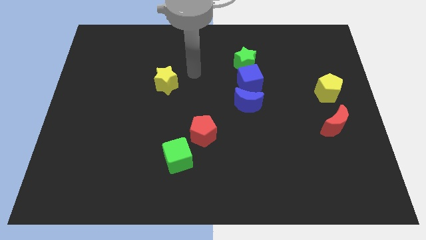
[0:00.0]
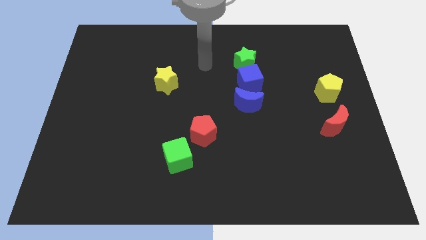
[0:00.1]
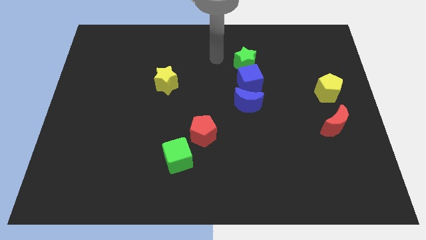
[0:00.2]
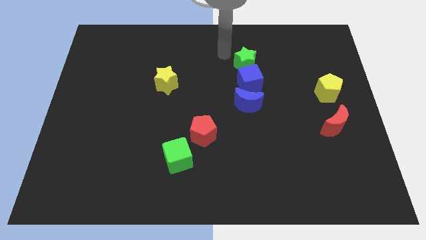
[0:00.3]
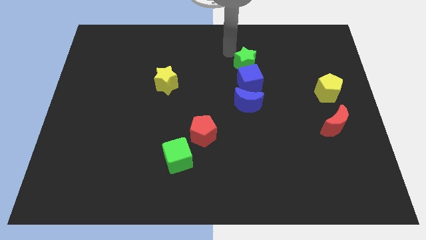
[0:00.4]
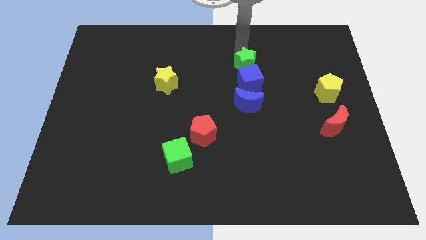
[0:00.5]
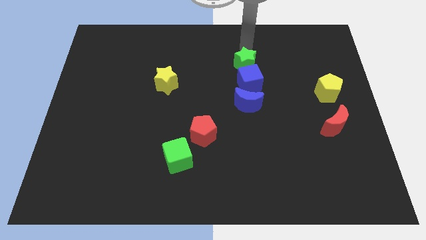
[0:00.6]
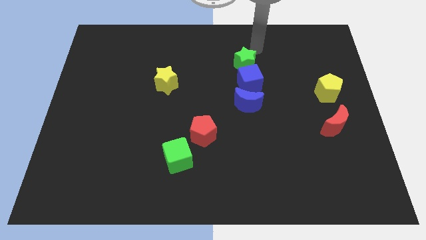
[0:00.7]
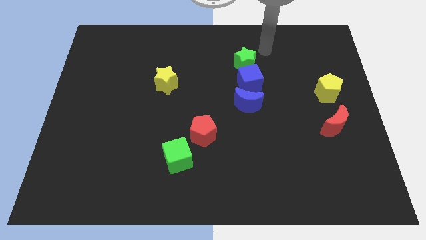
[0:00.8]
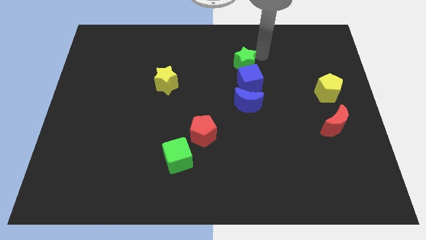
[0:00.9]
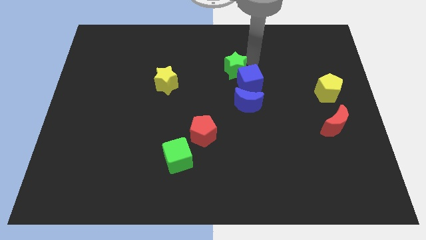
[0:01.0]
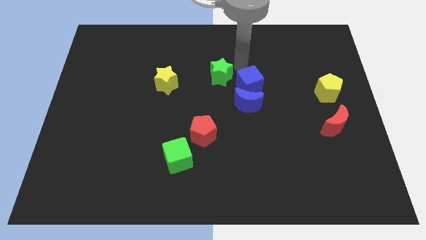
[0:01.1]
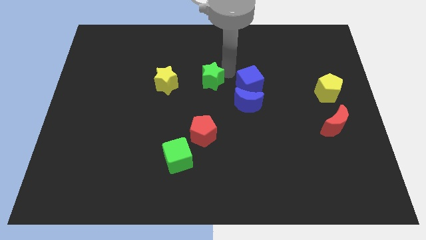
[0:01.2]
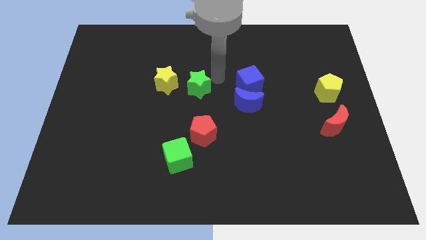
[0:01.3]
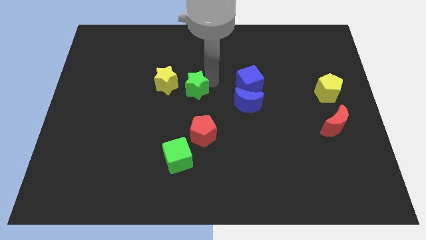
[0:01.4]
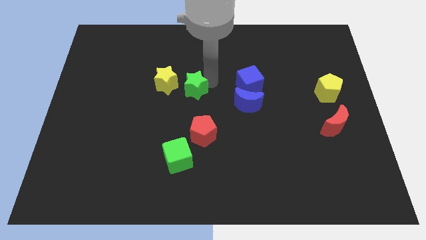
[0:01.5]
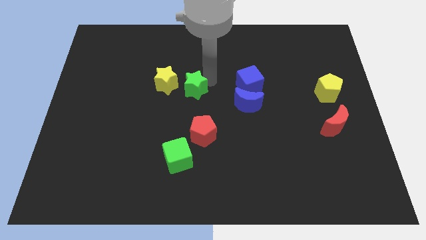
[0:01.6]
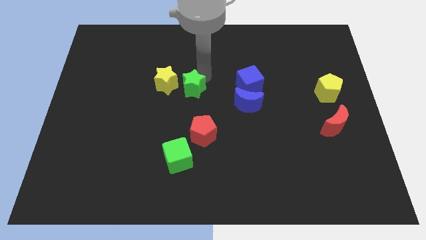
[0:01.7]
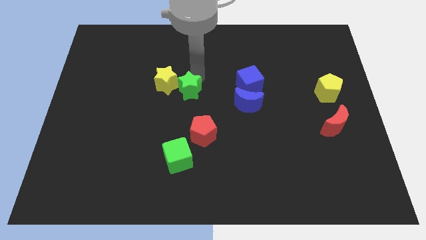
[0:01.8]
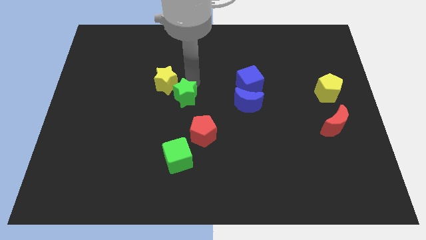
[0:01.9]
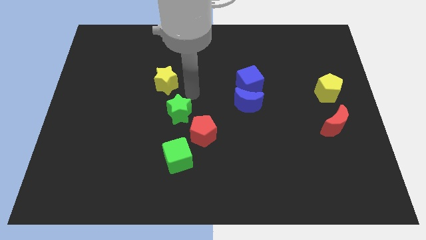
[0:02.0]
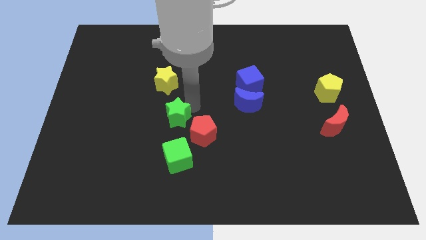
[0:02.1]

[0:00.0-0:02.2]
place the green star above the green cube

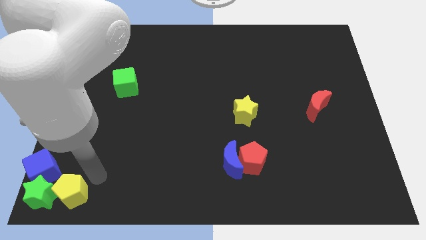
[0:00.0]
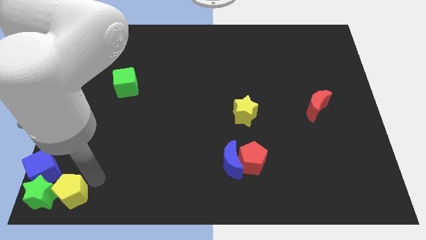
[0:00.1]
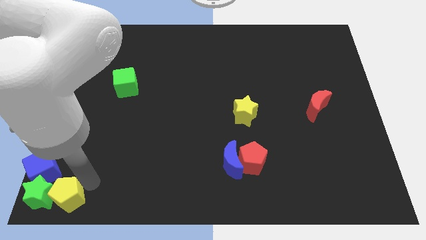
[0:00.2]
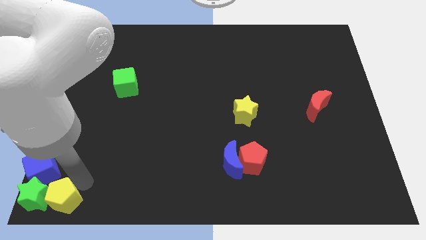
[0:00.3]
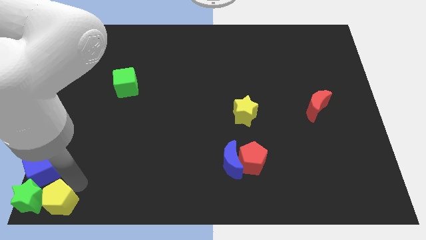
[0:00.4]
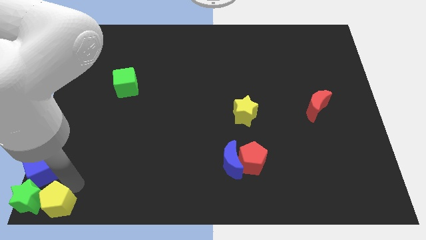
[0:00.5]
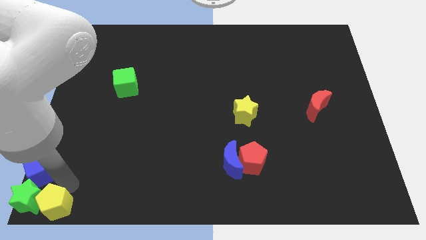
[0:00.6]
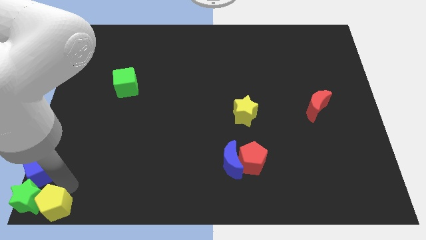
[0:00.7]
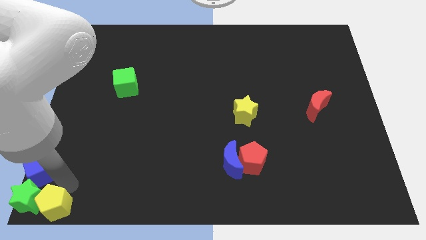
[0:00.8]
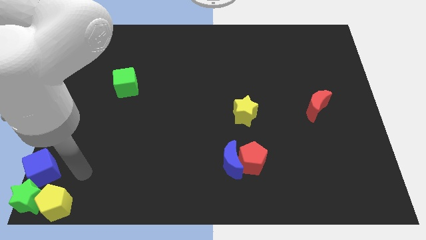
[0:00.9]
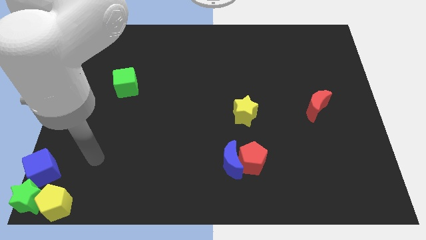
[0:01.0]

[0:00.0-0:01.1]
push the green star towards the bottom left corner of the board with the help of the yellow pentagon

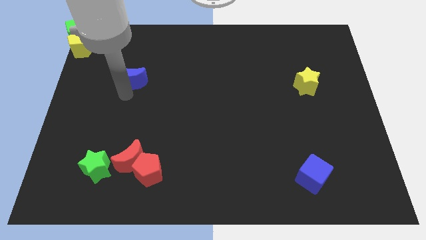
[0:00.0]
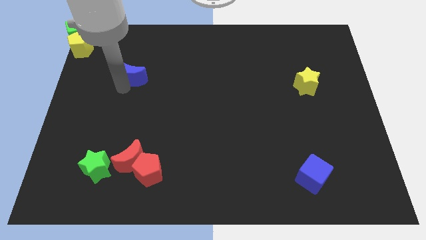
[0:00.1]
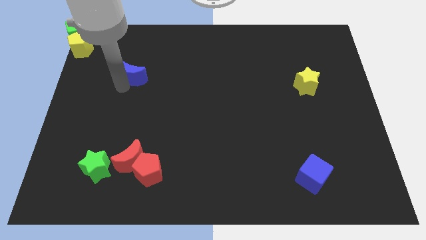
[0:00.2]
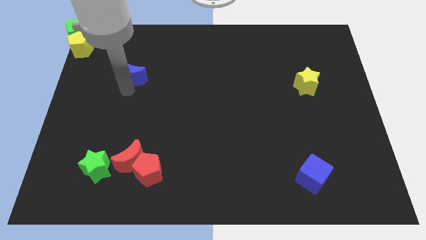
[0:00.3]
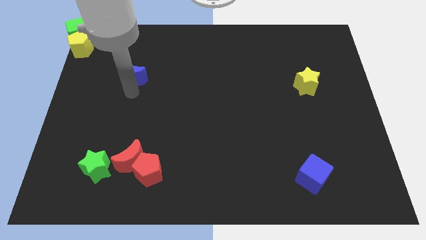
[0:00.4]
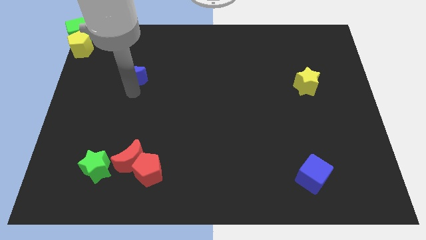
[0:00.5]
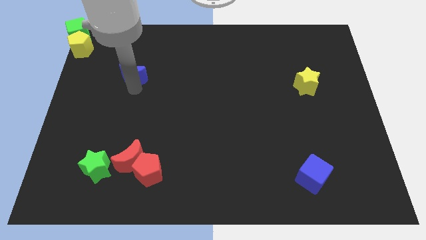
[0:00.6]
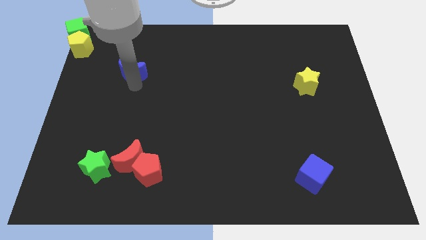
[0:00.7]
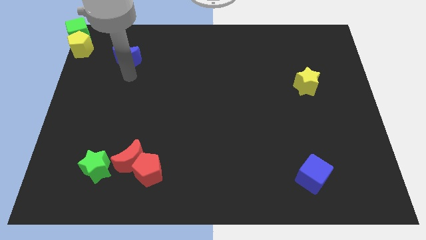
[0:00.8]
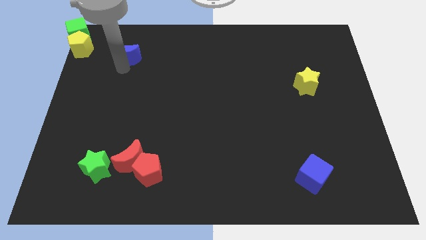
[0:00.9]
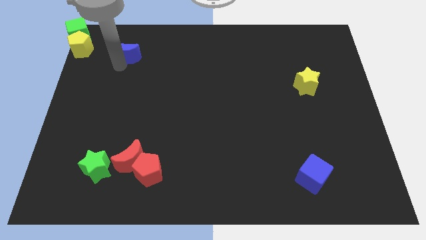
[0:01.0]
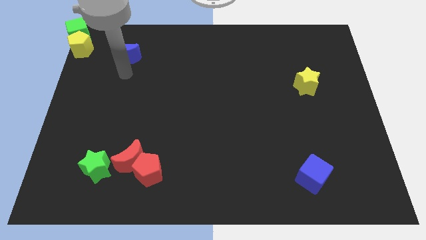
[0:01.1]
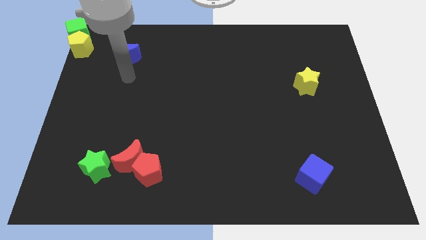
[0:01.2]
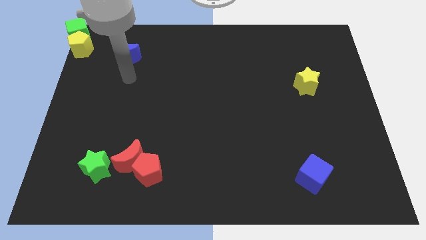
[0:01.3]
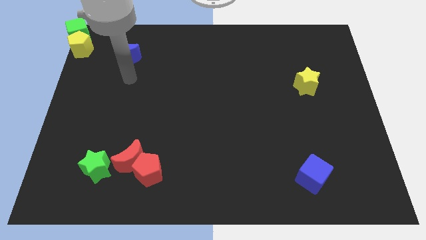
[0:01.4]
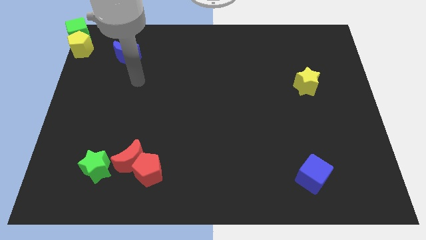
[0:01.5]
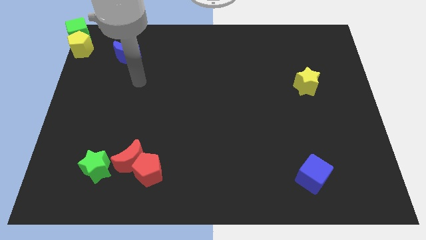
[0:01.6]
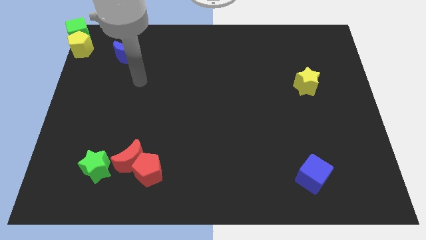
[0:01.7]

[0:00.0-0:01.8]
move the blue crescent towards the top left corner

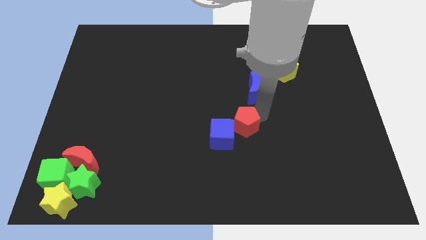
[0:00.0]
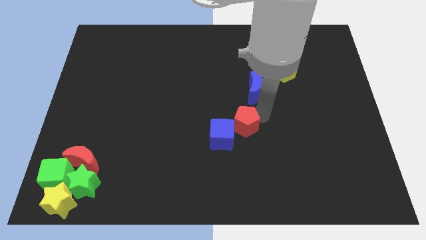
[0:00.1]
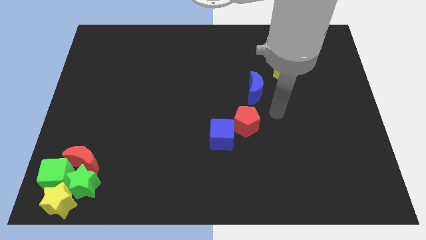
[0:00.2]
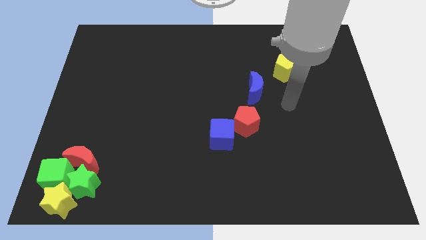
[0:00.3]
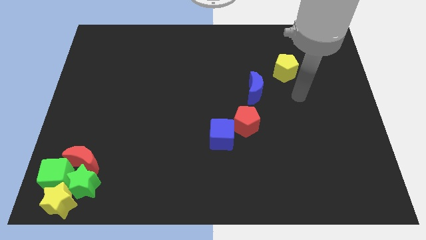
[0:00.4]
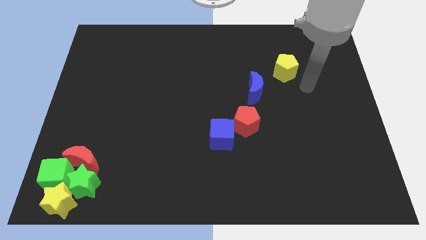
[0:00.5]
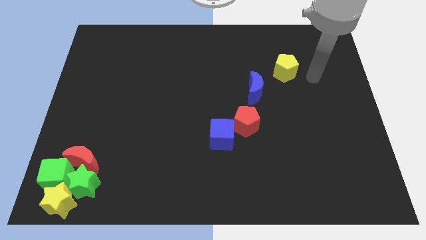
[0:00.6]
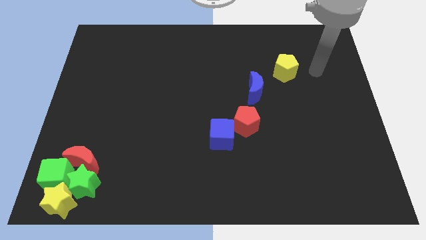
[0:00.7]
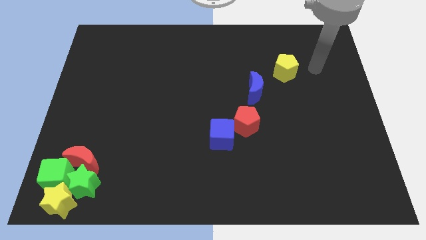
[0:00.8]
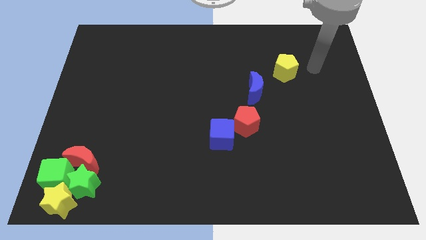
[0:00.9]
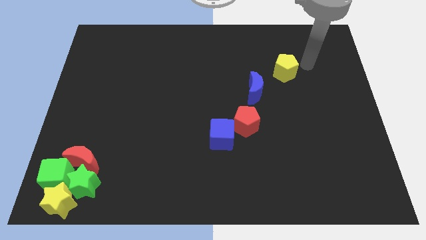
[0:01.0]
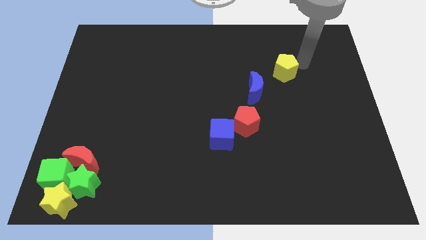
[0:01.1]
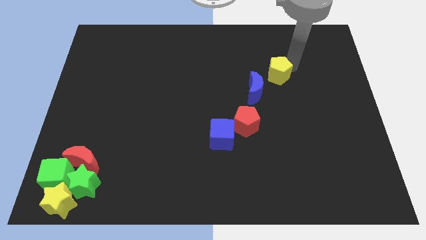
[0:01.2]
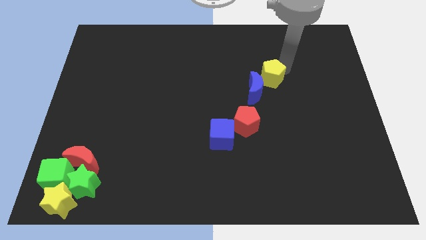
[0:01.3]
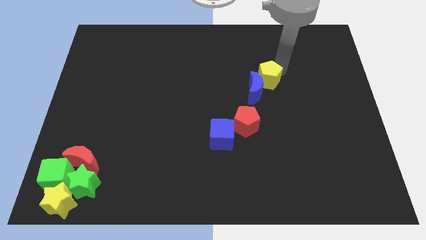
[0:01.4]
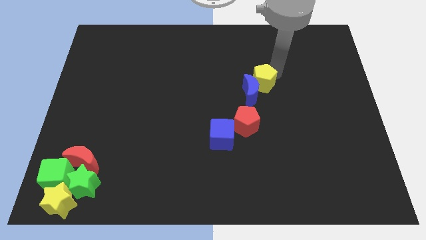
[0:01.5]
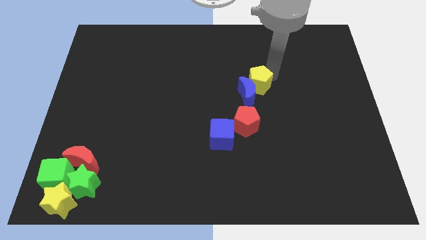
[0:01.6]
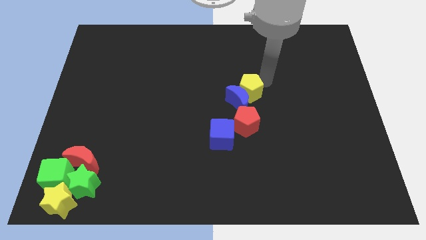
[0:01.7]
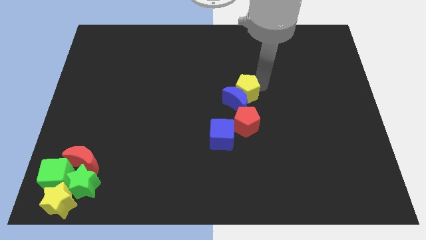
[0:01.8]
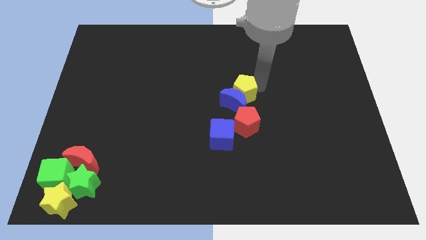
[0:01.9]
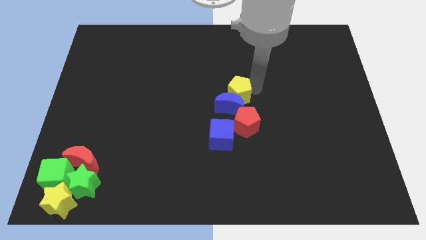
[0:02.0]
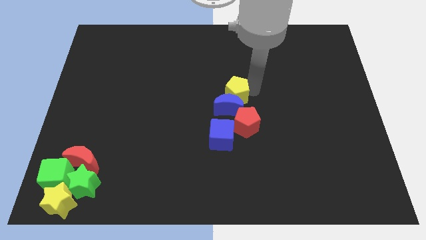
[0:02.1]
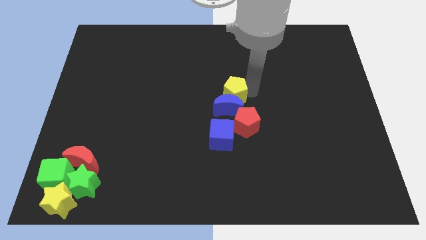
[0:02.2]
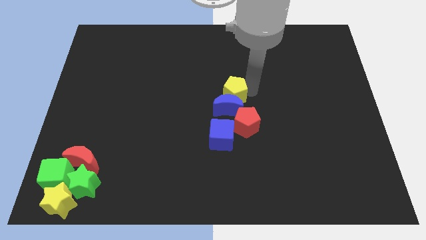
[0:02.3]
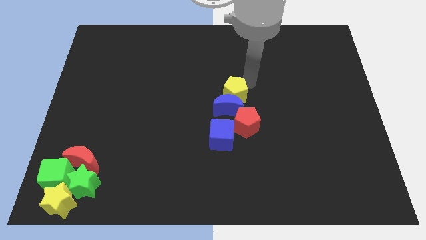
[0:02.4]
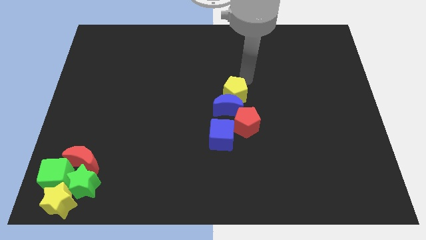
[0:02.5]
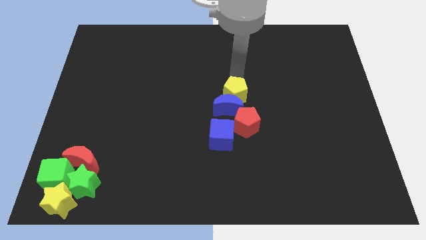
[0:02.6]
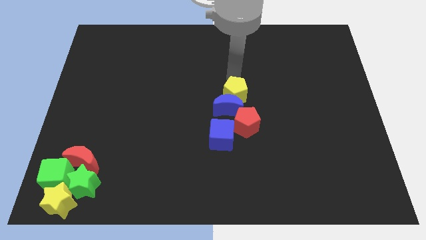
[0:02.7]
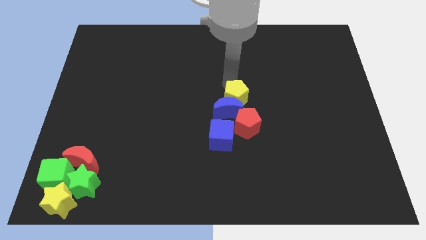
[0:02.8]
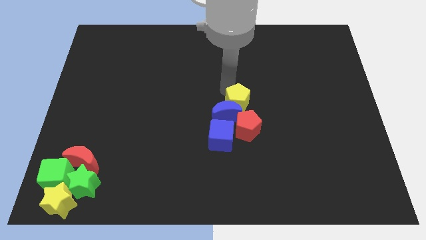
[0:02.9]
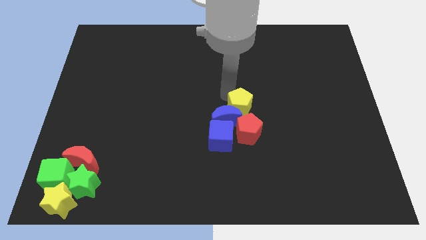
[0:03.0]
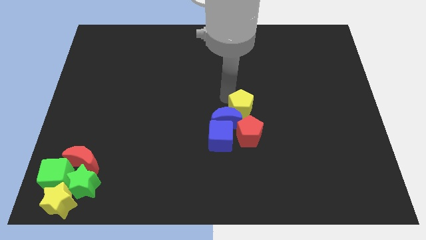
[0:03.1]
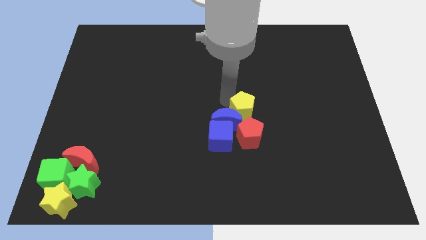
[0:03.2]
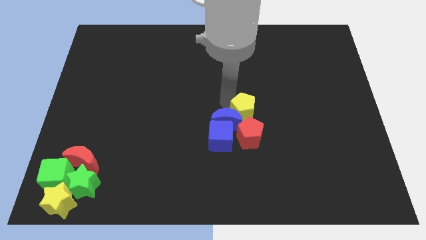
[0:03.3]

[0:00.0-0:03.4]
move the yellow pentagon and the blue moon towards the center of the board

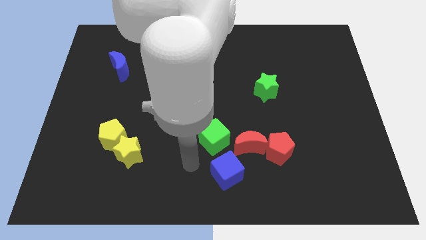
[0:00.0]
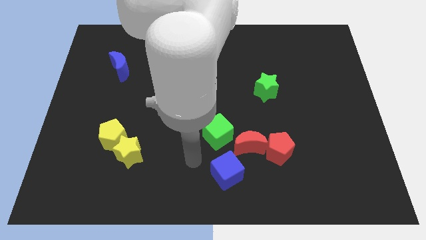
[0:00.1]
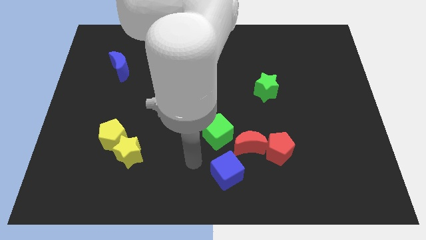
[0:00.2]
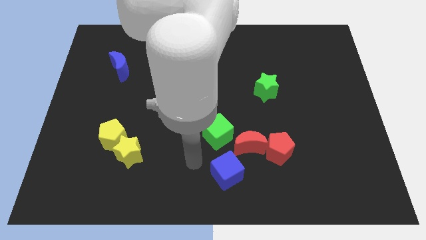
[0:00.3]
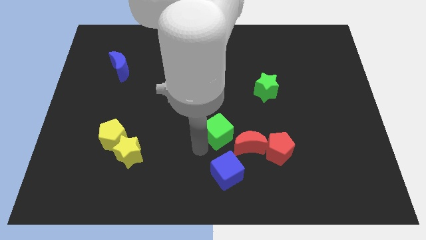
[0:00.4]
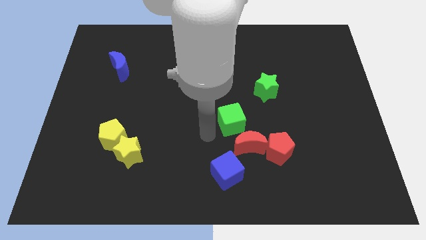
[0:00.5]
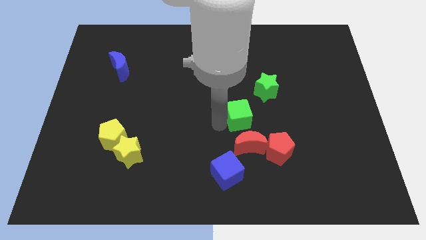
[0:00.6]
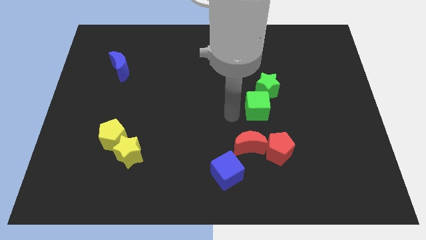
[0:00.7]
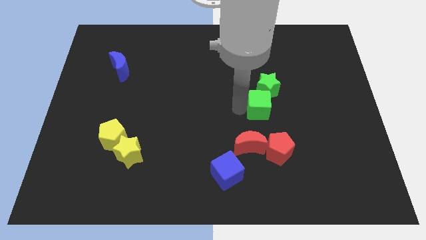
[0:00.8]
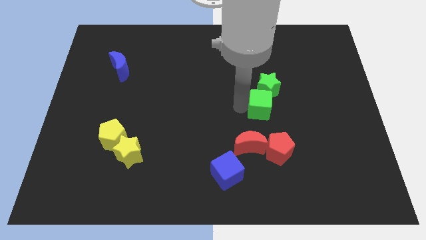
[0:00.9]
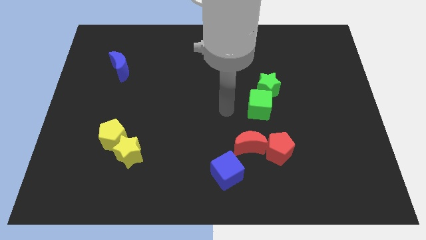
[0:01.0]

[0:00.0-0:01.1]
push the green cube into the green star
